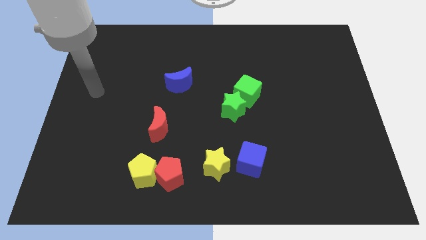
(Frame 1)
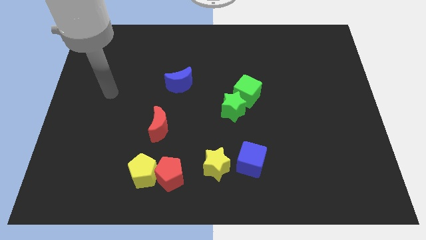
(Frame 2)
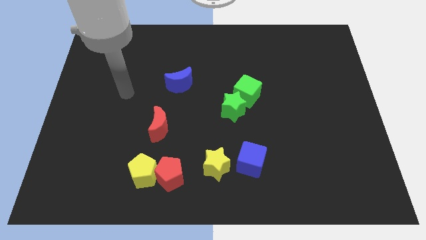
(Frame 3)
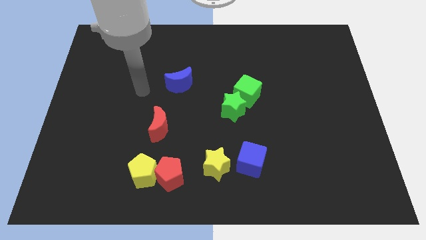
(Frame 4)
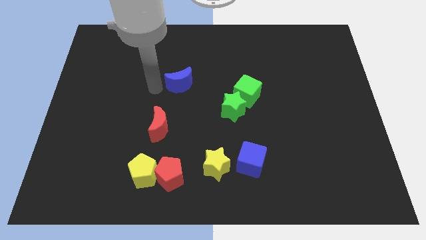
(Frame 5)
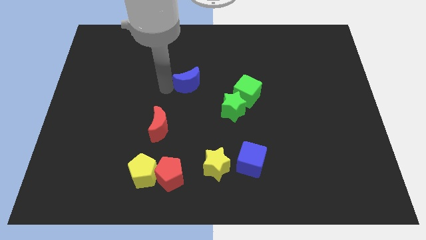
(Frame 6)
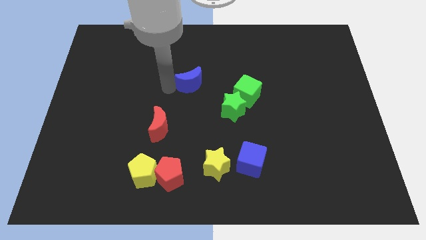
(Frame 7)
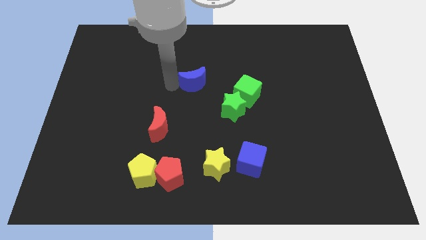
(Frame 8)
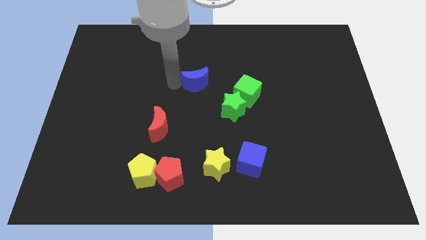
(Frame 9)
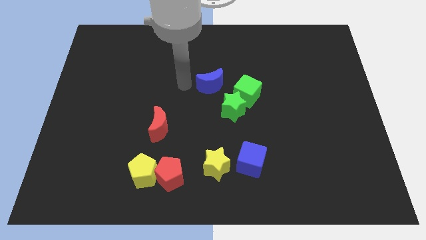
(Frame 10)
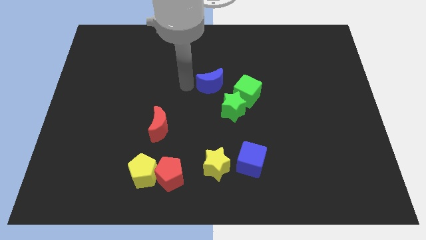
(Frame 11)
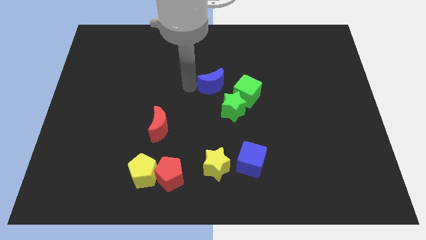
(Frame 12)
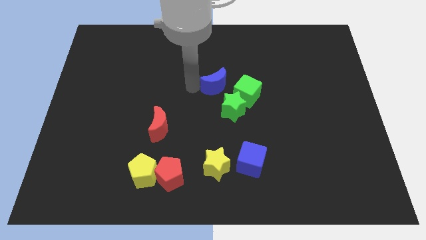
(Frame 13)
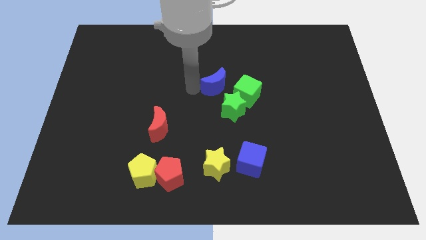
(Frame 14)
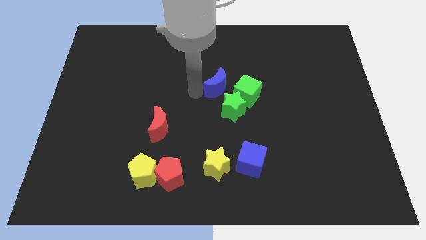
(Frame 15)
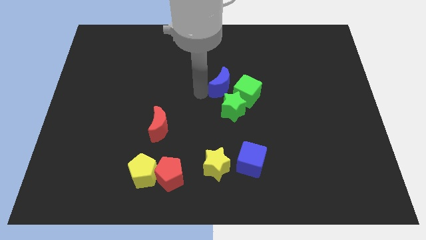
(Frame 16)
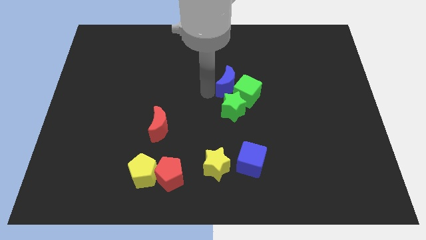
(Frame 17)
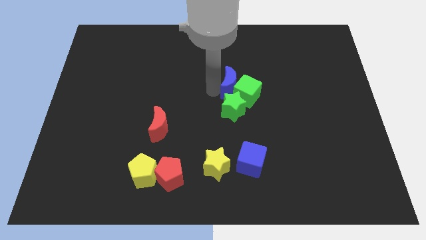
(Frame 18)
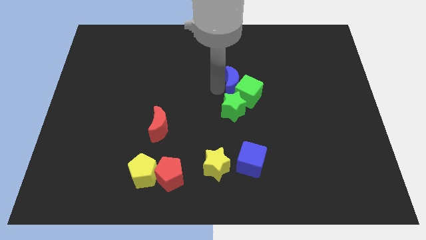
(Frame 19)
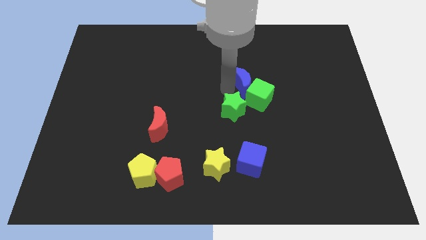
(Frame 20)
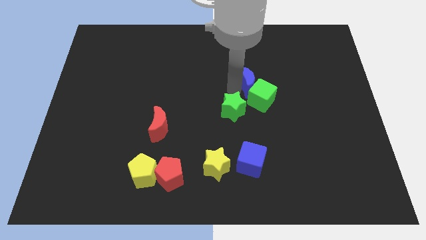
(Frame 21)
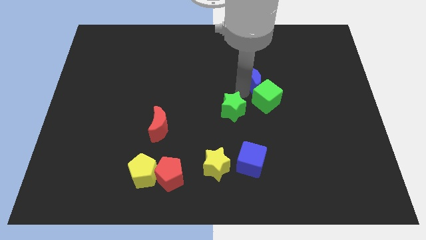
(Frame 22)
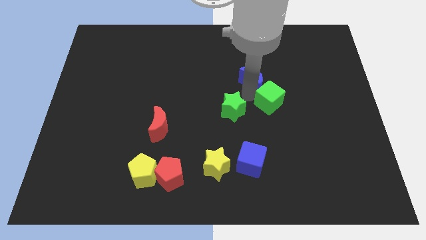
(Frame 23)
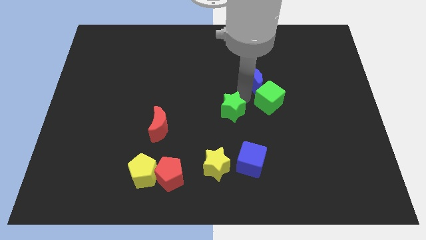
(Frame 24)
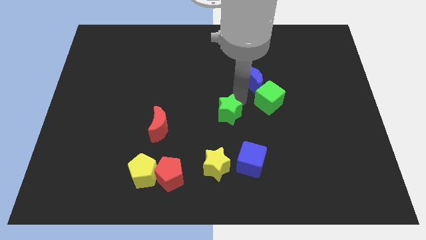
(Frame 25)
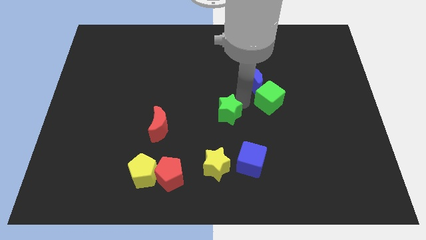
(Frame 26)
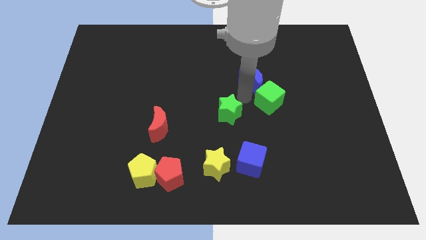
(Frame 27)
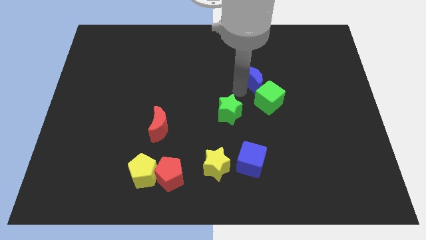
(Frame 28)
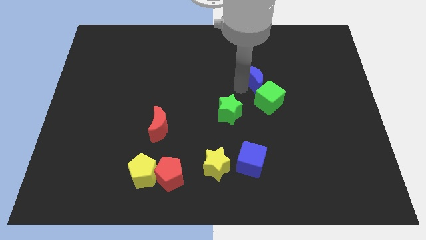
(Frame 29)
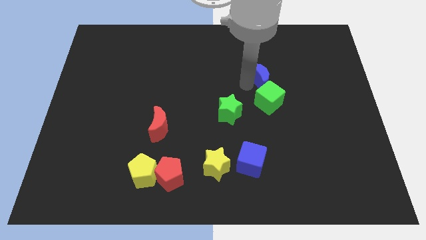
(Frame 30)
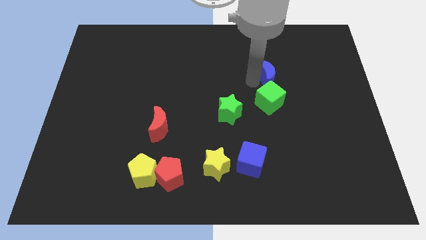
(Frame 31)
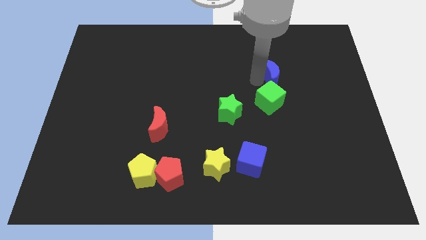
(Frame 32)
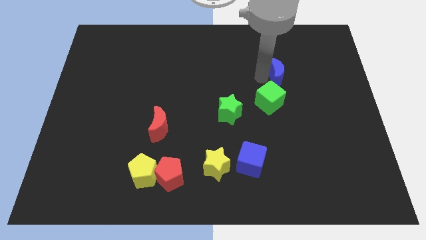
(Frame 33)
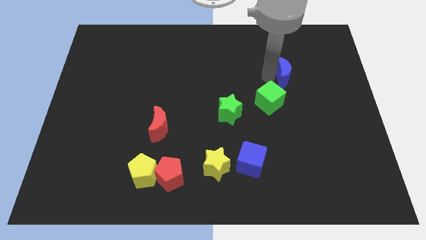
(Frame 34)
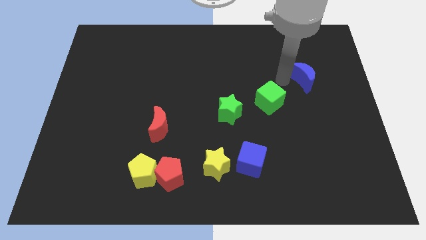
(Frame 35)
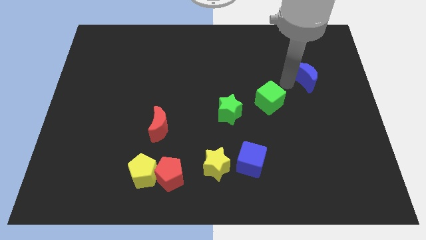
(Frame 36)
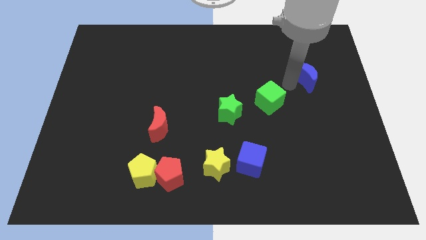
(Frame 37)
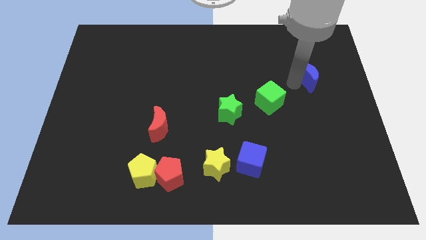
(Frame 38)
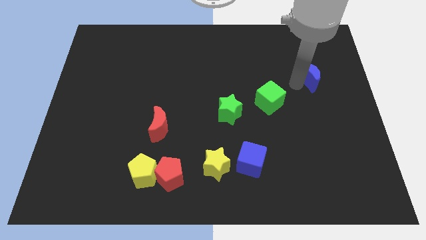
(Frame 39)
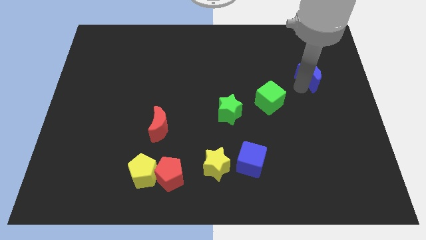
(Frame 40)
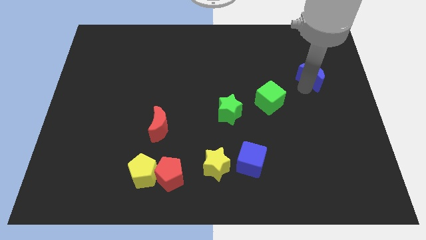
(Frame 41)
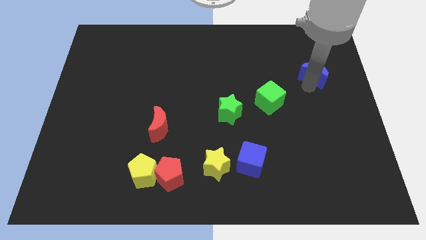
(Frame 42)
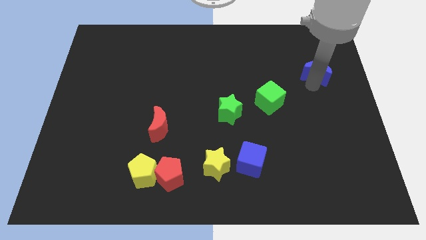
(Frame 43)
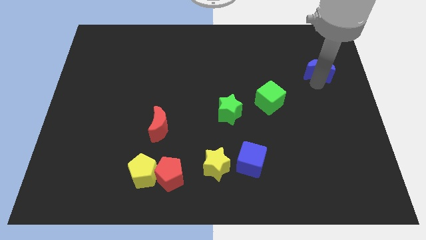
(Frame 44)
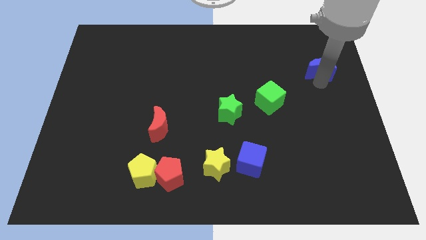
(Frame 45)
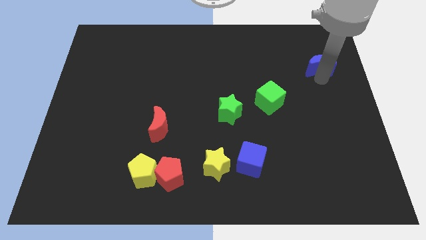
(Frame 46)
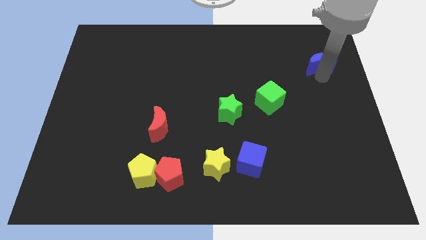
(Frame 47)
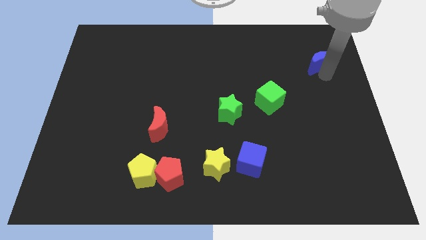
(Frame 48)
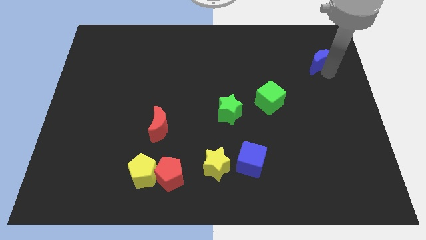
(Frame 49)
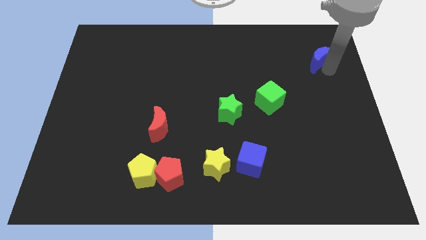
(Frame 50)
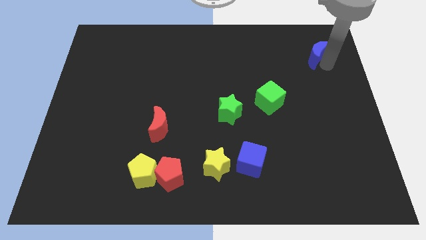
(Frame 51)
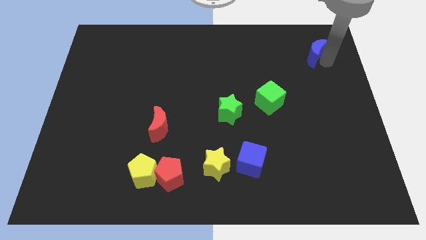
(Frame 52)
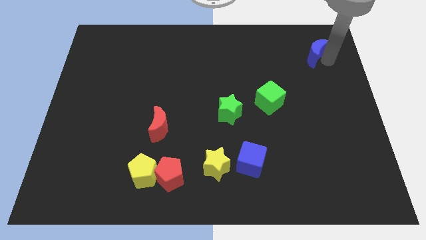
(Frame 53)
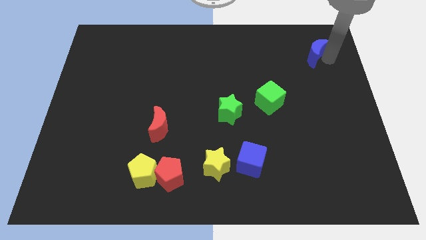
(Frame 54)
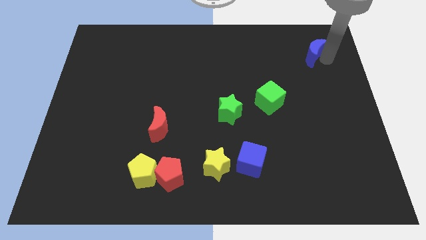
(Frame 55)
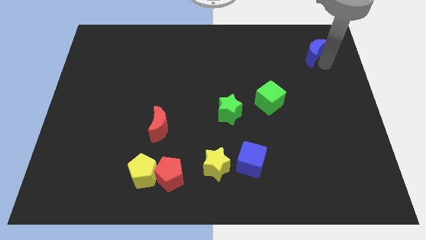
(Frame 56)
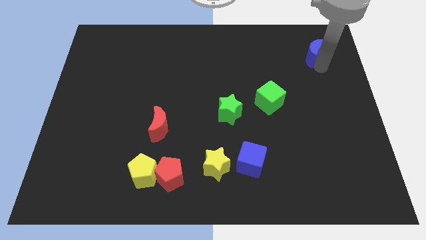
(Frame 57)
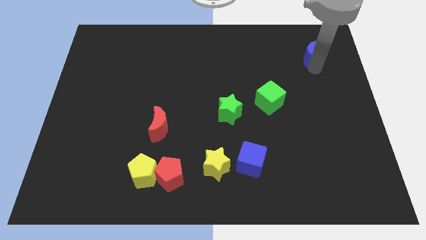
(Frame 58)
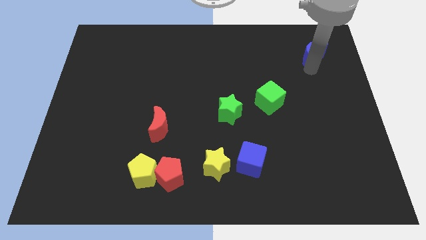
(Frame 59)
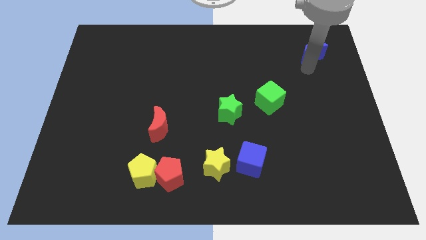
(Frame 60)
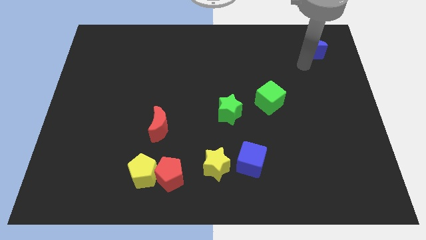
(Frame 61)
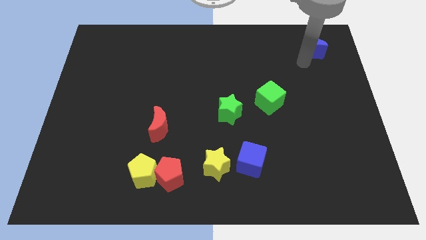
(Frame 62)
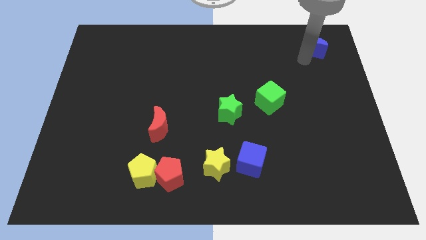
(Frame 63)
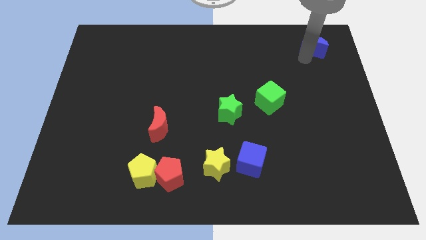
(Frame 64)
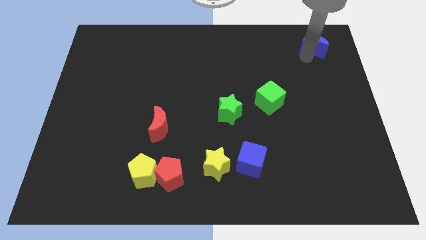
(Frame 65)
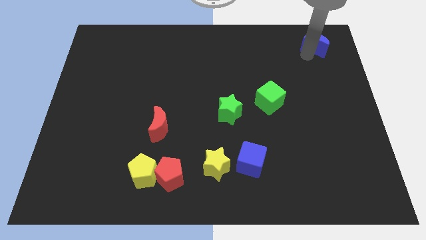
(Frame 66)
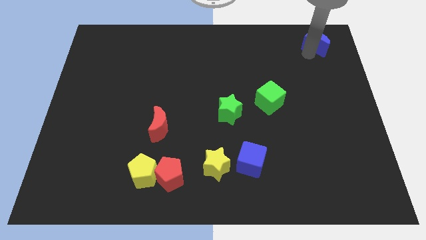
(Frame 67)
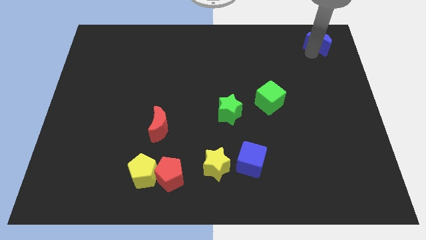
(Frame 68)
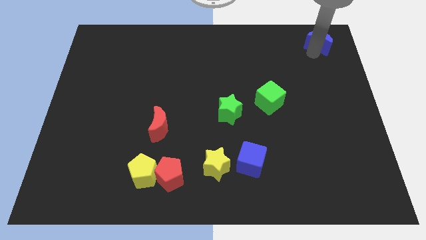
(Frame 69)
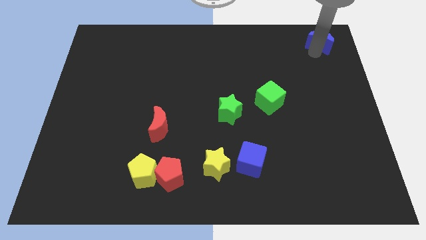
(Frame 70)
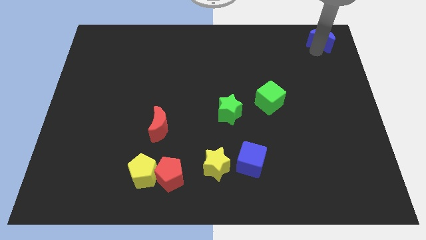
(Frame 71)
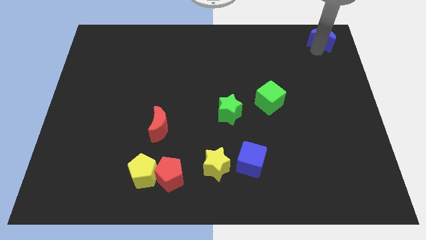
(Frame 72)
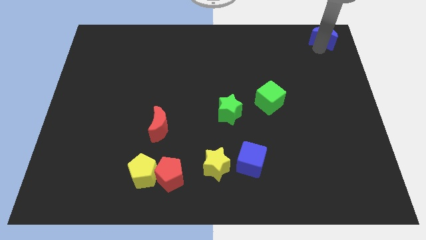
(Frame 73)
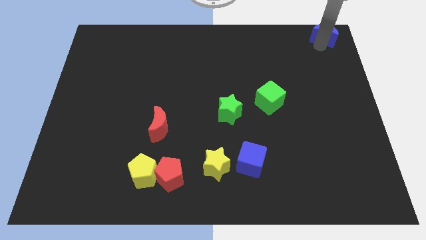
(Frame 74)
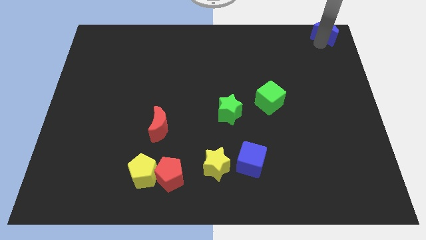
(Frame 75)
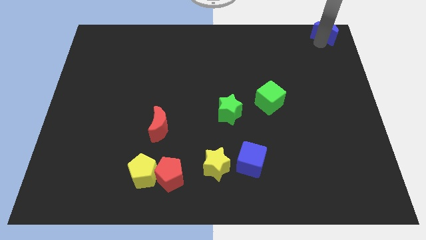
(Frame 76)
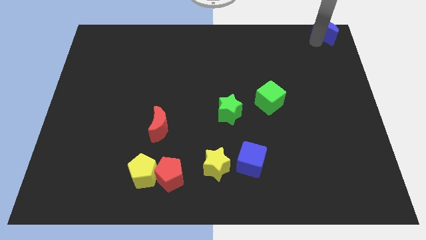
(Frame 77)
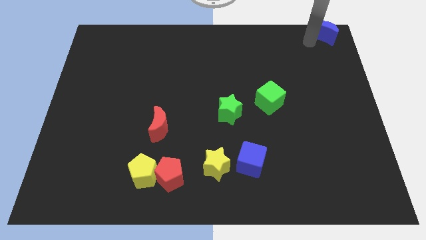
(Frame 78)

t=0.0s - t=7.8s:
move the blue moon to the top right corner

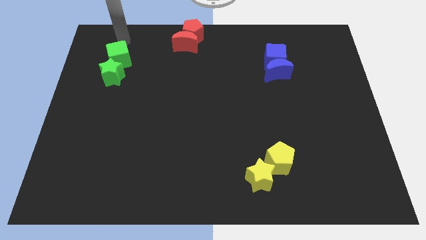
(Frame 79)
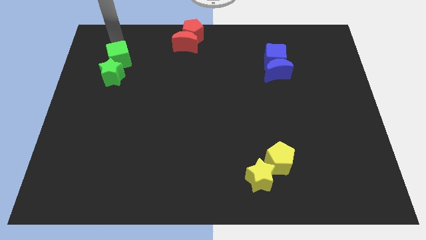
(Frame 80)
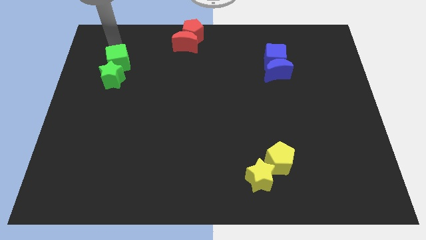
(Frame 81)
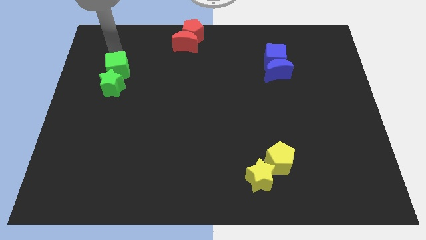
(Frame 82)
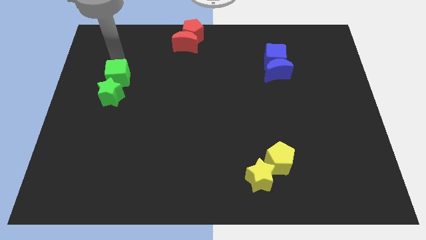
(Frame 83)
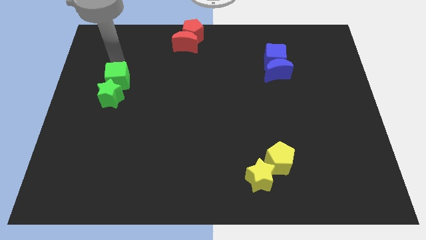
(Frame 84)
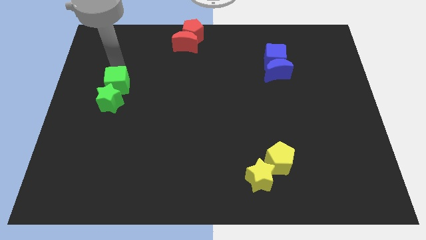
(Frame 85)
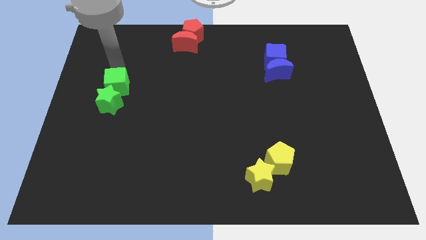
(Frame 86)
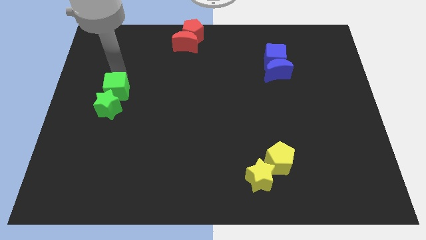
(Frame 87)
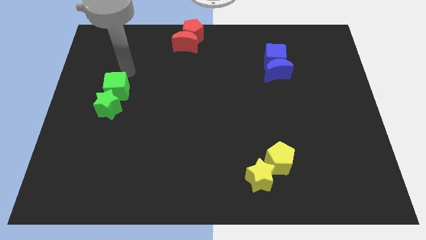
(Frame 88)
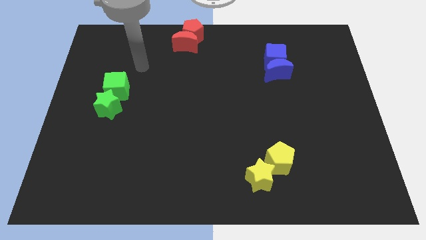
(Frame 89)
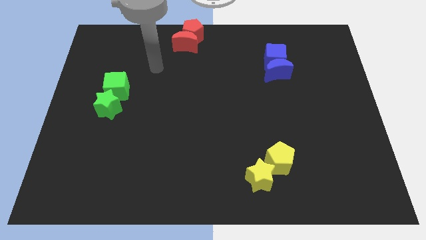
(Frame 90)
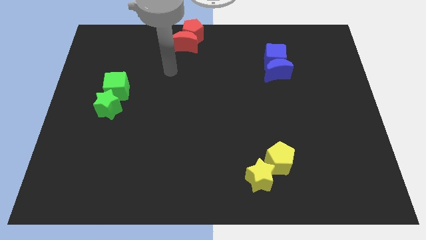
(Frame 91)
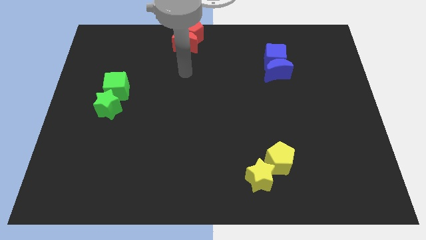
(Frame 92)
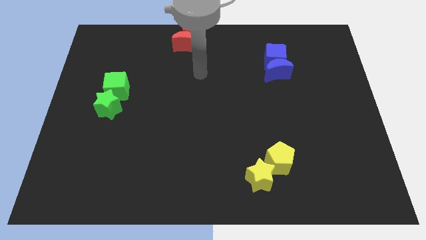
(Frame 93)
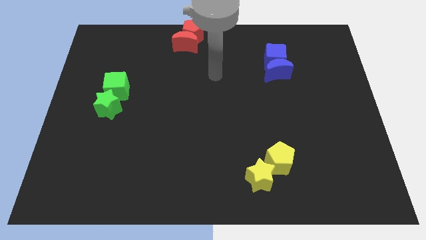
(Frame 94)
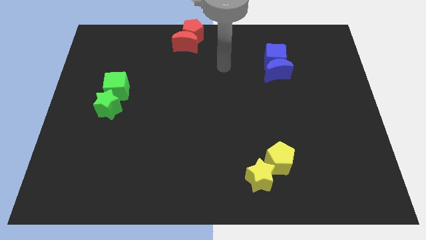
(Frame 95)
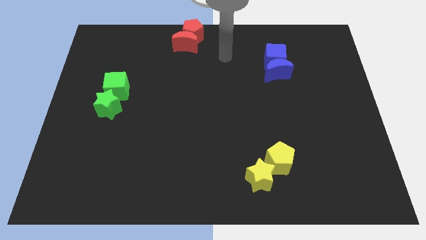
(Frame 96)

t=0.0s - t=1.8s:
move the green cube to the left center along with the green star
